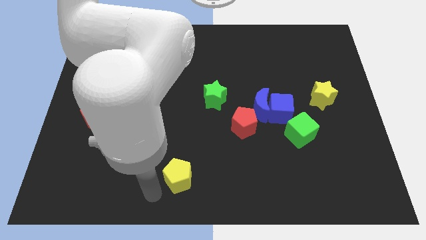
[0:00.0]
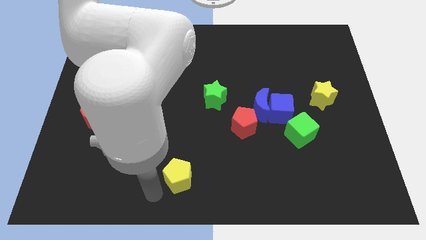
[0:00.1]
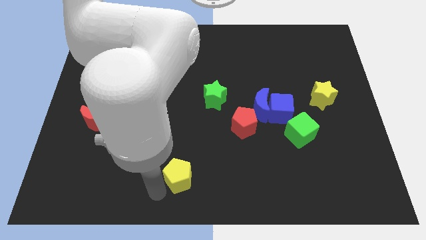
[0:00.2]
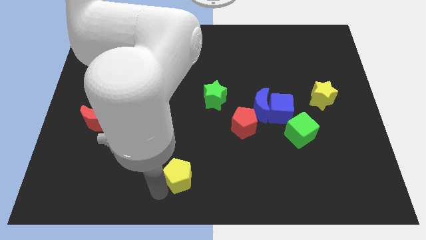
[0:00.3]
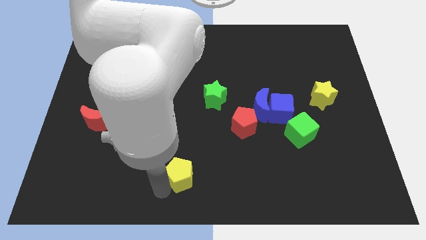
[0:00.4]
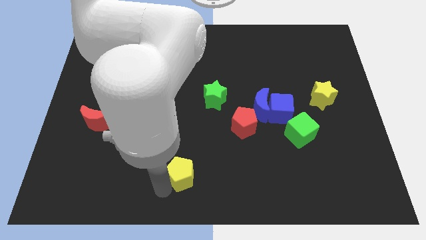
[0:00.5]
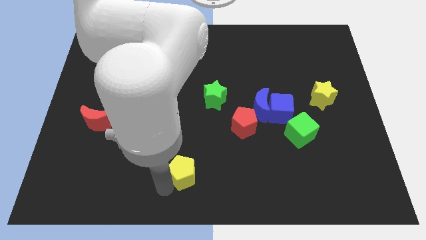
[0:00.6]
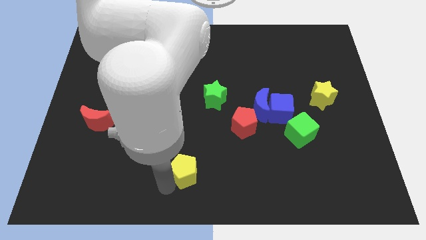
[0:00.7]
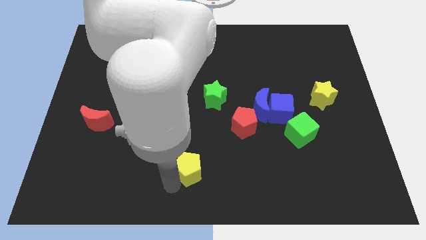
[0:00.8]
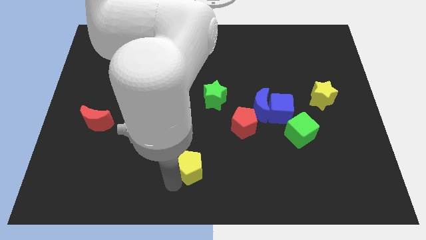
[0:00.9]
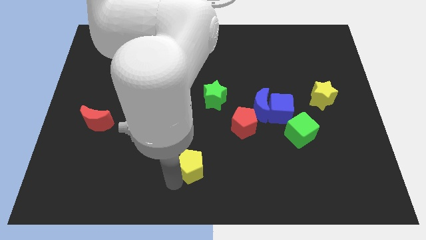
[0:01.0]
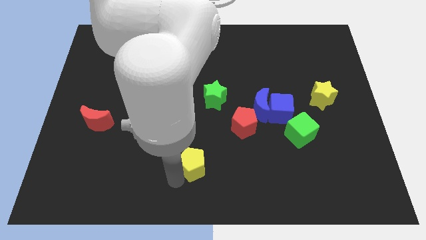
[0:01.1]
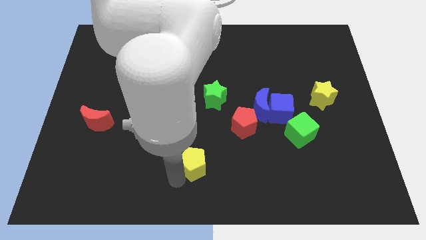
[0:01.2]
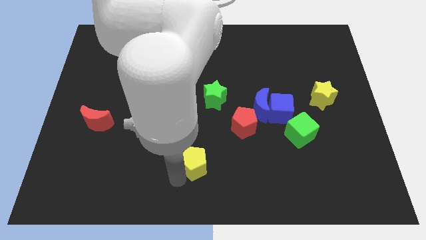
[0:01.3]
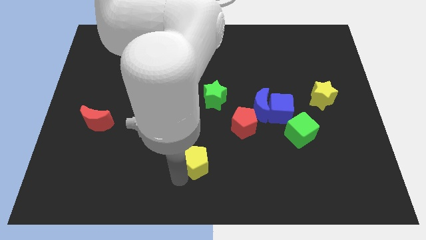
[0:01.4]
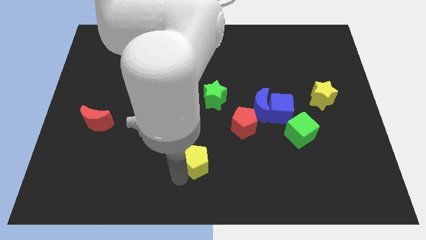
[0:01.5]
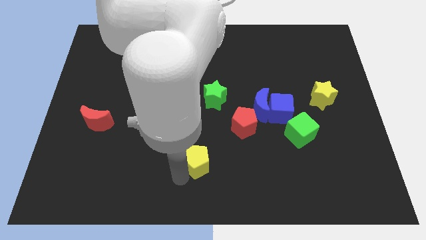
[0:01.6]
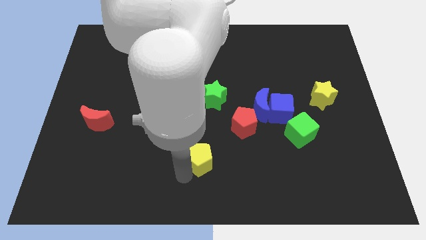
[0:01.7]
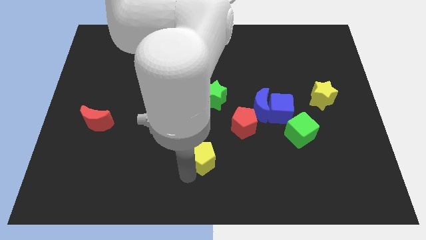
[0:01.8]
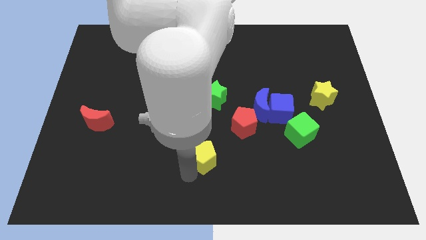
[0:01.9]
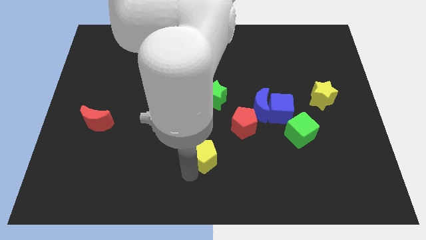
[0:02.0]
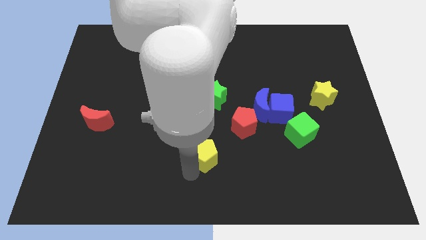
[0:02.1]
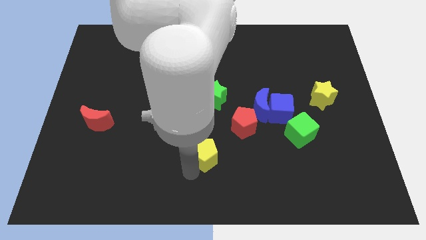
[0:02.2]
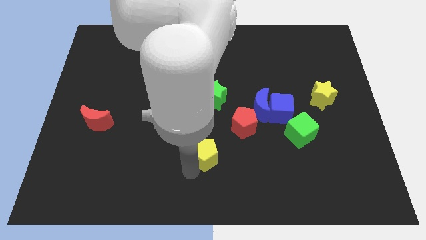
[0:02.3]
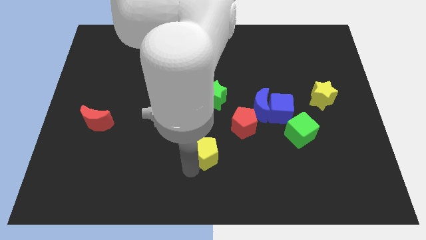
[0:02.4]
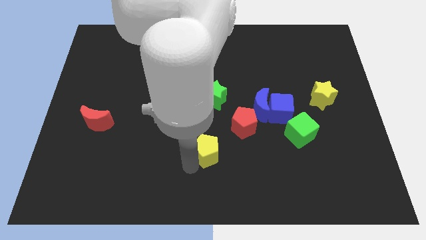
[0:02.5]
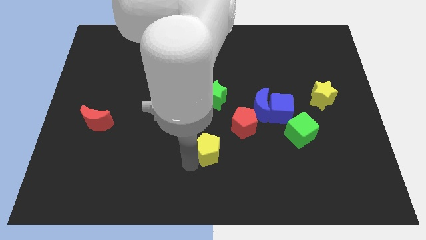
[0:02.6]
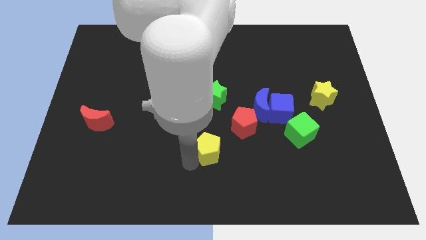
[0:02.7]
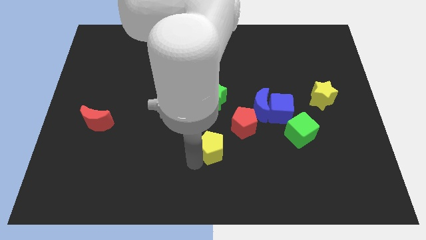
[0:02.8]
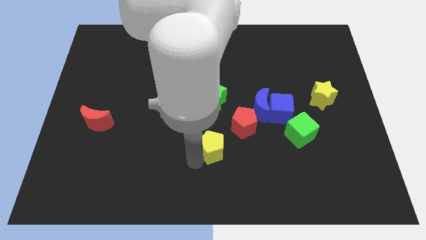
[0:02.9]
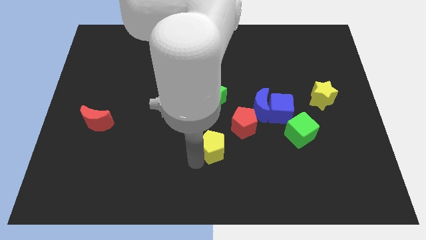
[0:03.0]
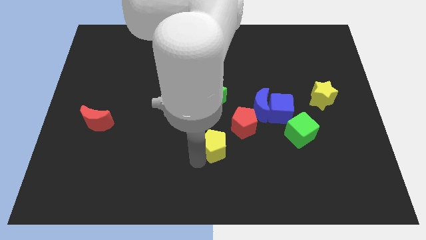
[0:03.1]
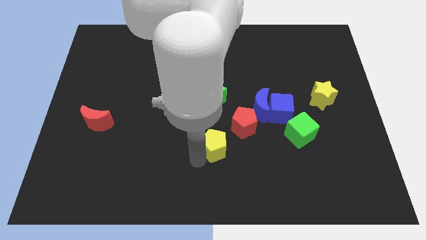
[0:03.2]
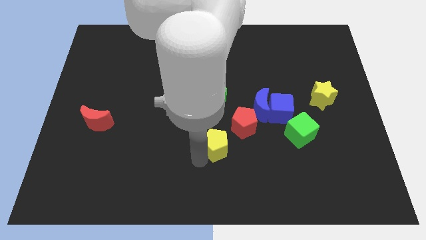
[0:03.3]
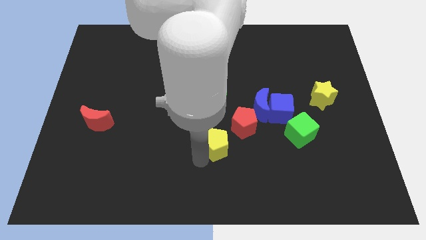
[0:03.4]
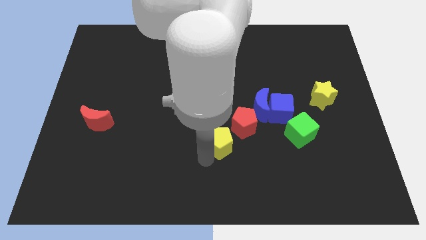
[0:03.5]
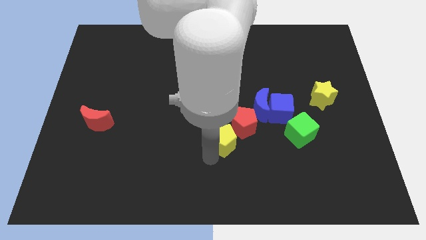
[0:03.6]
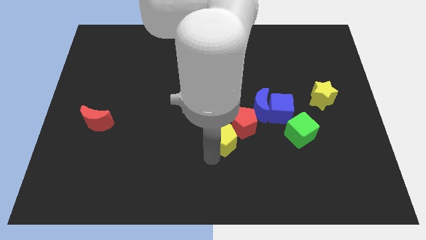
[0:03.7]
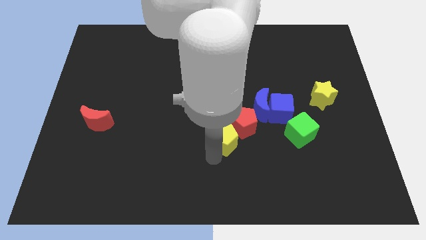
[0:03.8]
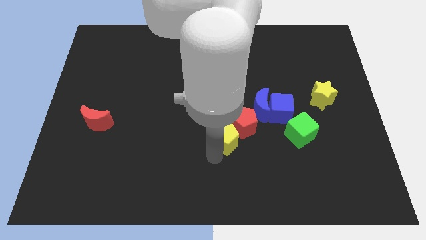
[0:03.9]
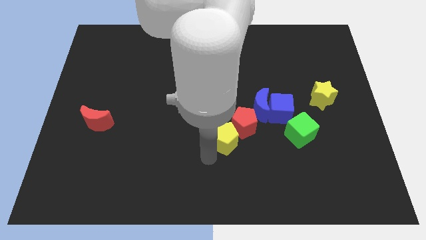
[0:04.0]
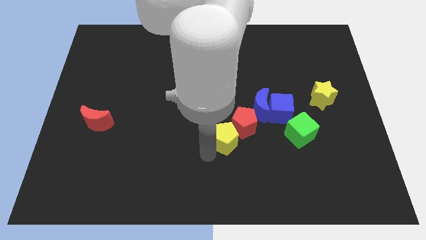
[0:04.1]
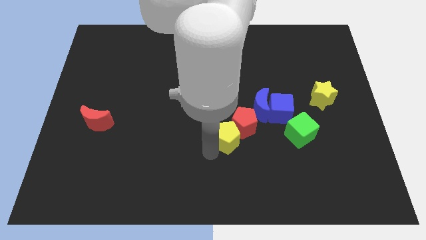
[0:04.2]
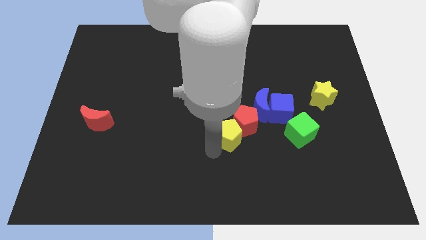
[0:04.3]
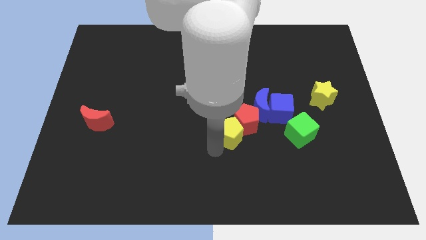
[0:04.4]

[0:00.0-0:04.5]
put the yellow pentagon to the bottom left side of the red pentagon

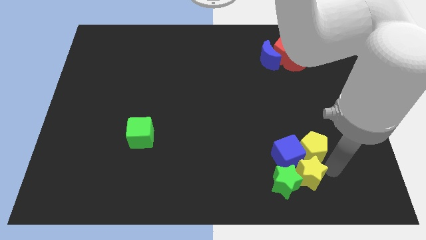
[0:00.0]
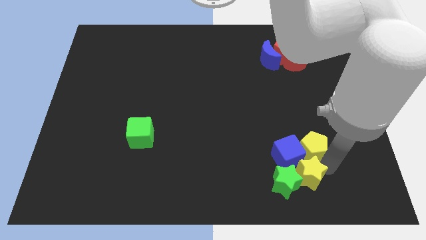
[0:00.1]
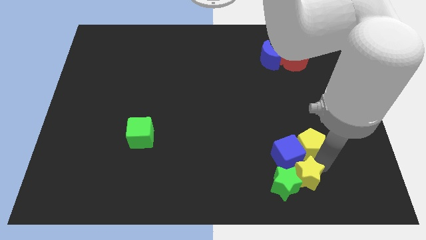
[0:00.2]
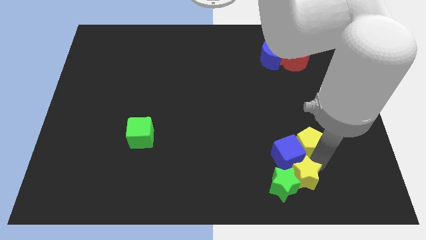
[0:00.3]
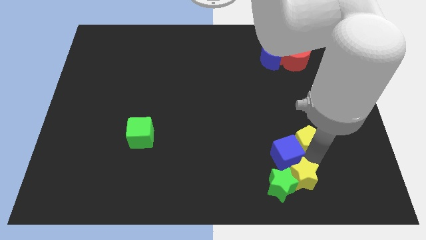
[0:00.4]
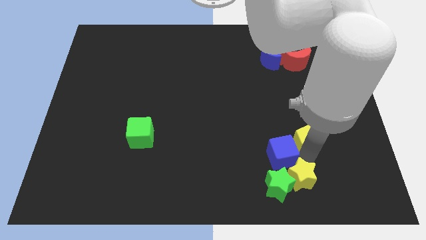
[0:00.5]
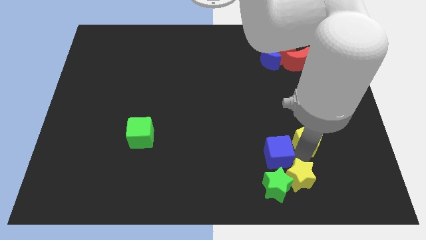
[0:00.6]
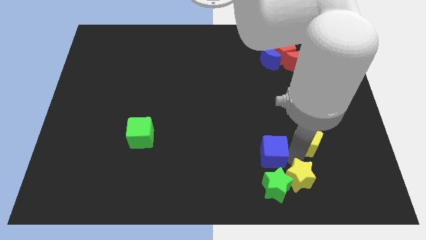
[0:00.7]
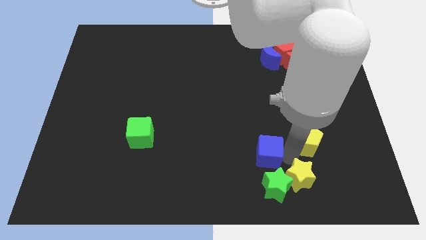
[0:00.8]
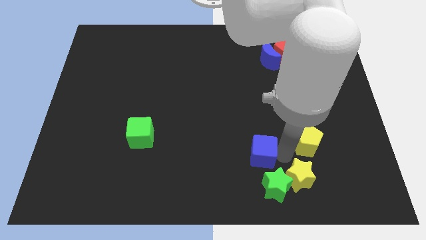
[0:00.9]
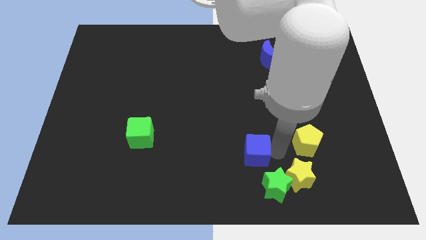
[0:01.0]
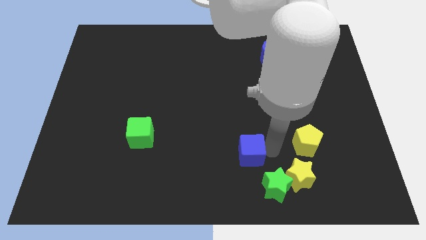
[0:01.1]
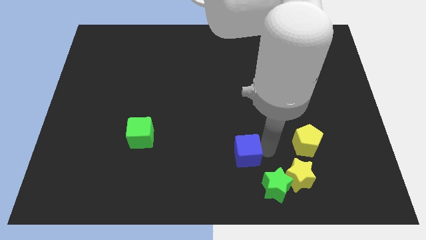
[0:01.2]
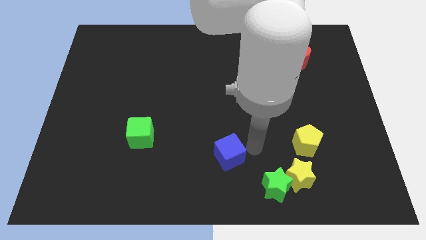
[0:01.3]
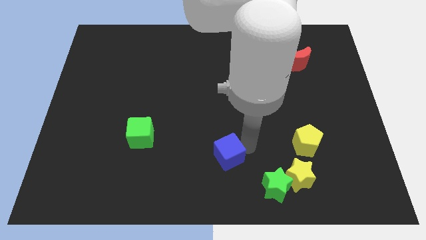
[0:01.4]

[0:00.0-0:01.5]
separate blue cube from yellow star and yellow pentagon

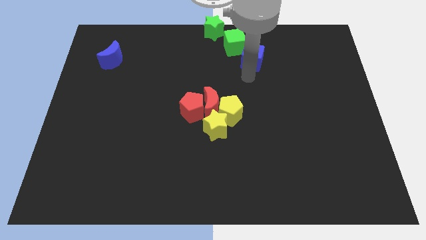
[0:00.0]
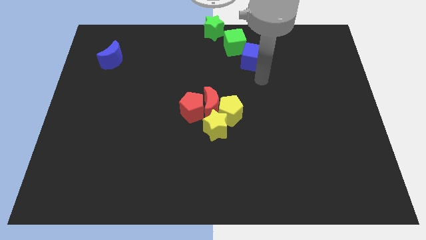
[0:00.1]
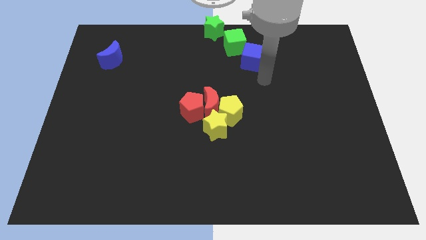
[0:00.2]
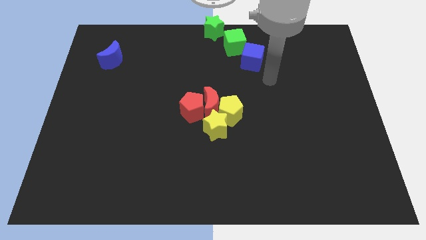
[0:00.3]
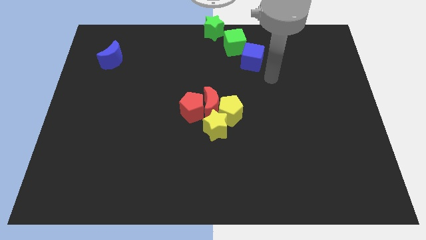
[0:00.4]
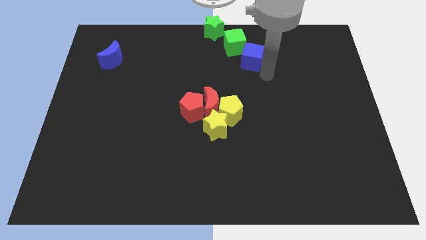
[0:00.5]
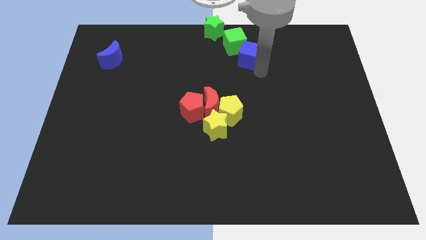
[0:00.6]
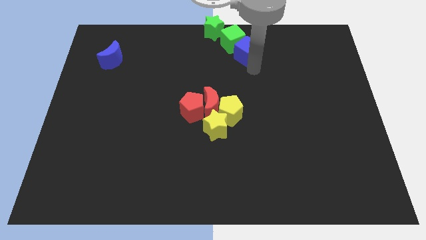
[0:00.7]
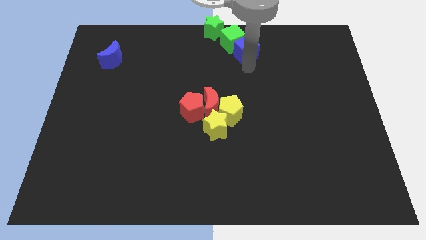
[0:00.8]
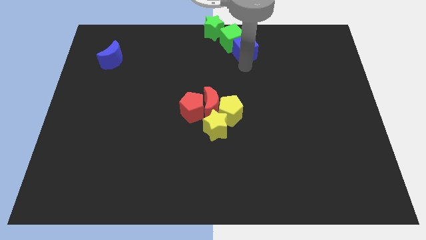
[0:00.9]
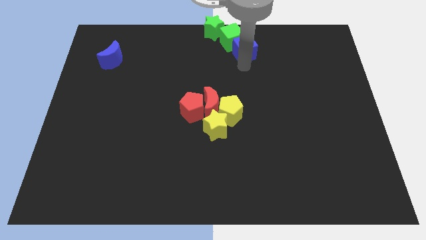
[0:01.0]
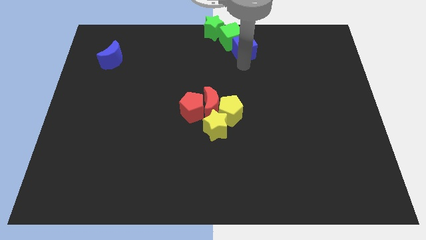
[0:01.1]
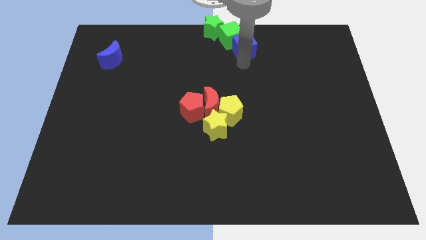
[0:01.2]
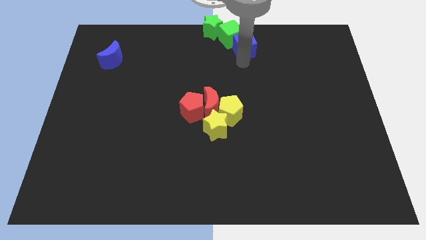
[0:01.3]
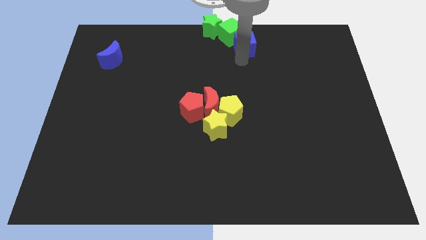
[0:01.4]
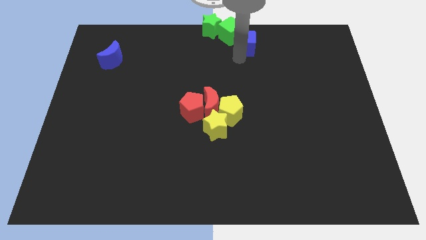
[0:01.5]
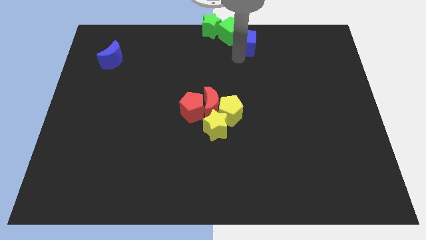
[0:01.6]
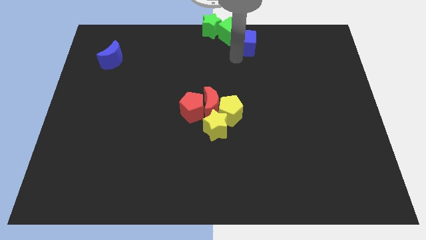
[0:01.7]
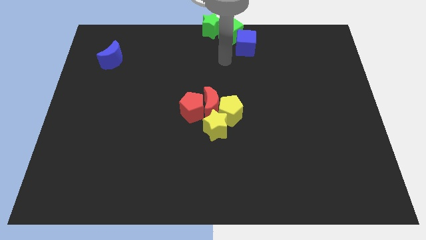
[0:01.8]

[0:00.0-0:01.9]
push the blue cube into the green cube

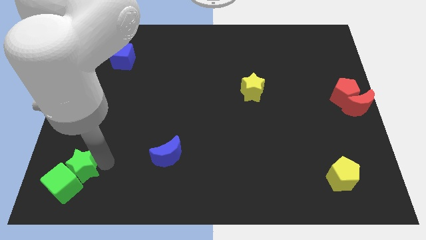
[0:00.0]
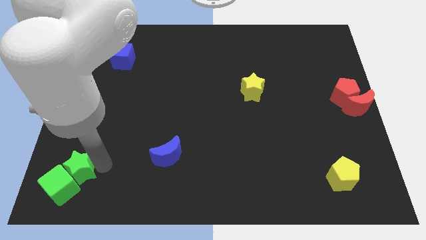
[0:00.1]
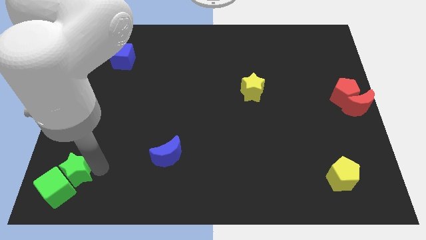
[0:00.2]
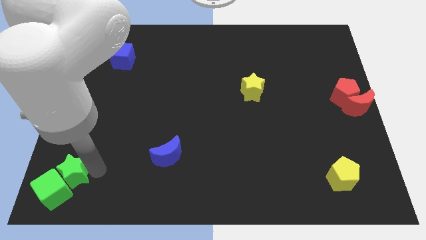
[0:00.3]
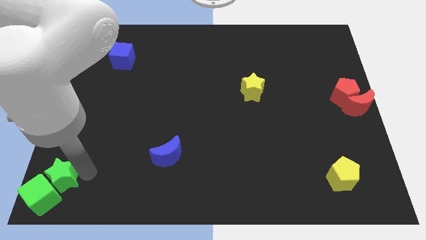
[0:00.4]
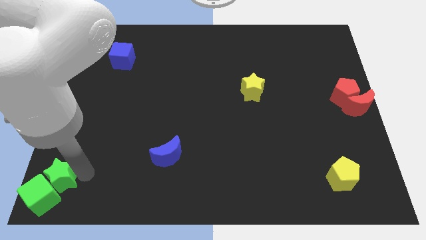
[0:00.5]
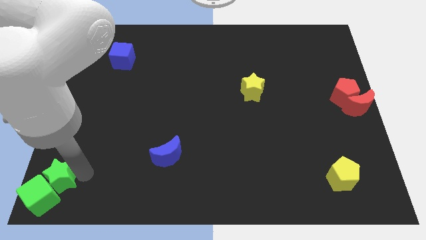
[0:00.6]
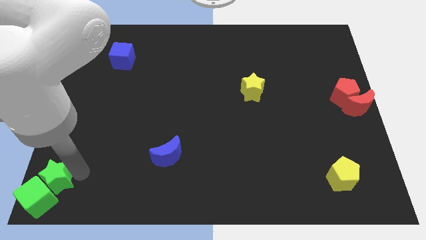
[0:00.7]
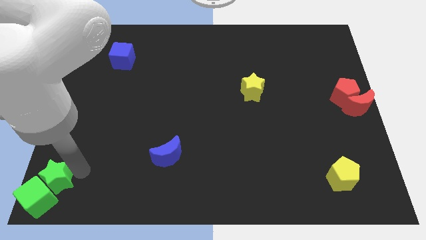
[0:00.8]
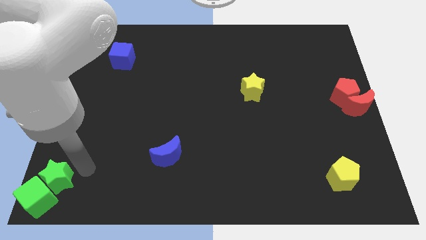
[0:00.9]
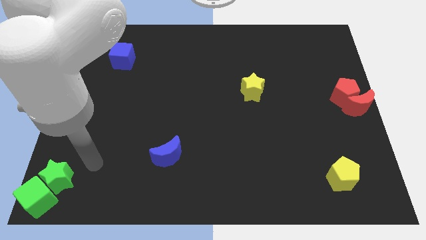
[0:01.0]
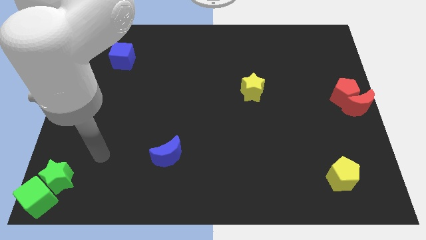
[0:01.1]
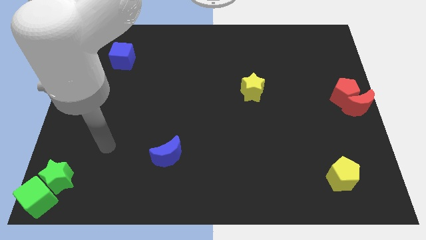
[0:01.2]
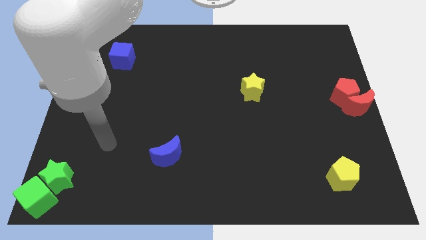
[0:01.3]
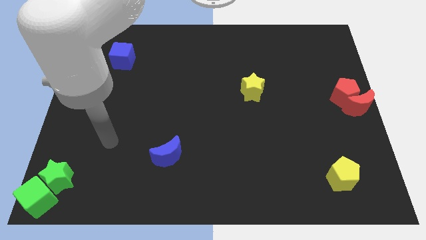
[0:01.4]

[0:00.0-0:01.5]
move the green blocks to bottom left
